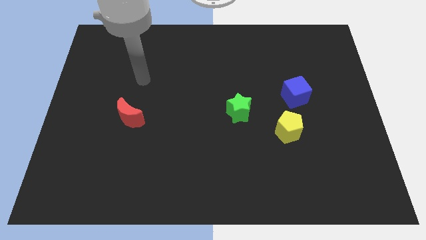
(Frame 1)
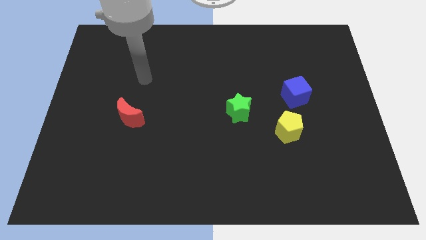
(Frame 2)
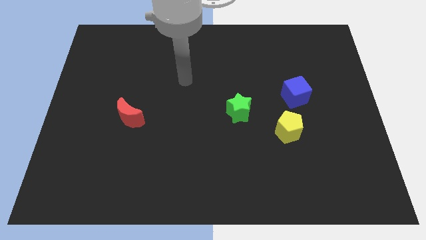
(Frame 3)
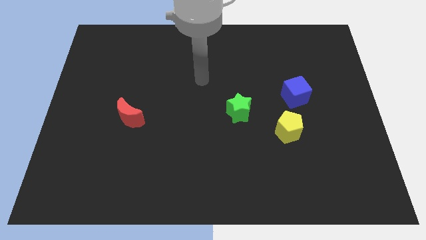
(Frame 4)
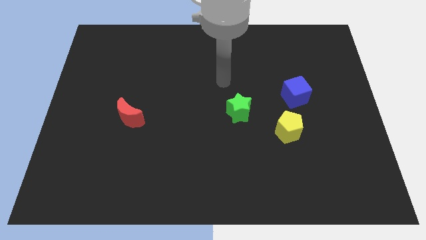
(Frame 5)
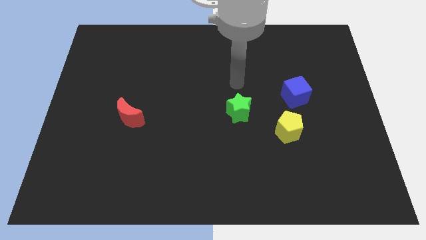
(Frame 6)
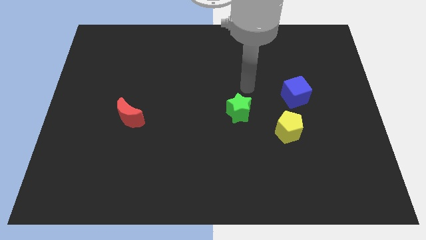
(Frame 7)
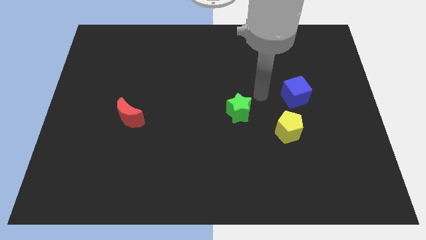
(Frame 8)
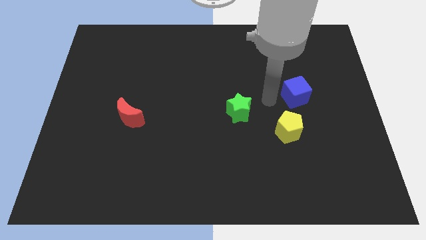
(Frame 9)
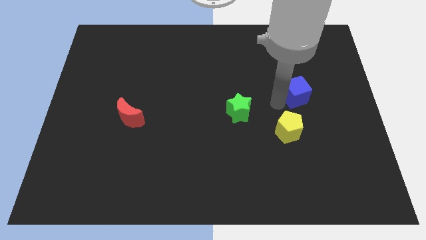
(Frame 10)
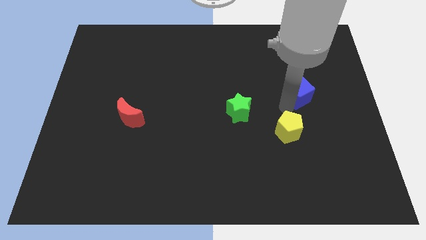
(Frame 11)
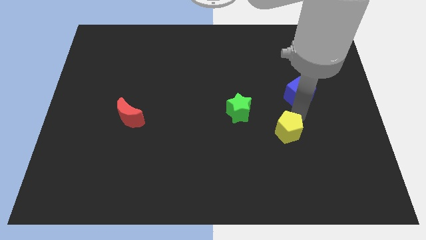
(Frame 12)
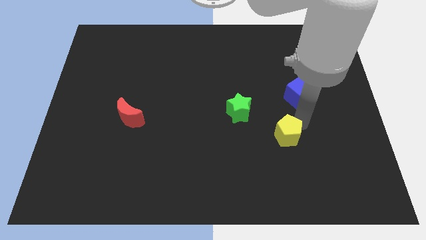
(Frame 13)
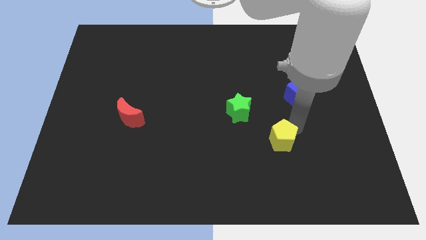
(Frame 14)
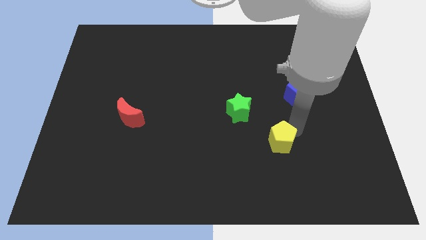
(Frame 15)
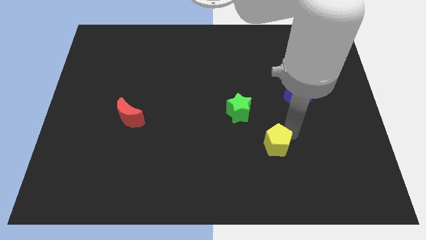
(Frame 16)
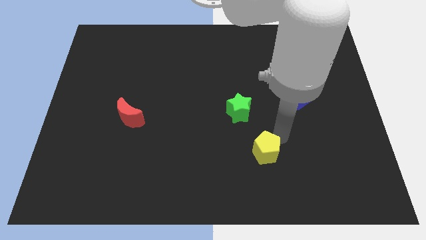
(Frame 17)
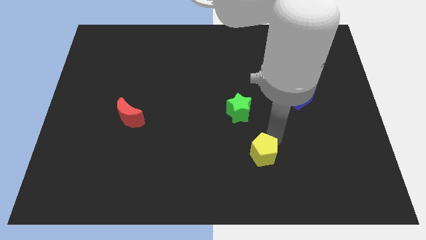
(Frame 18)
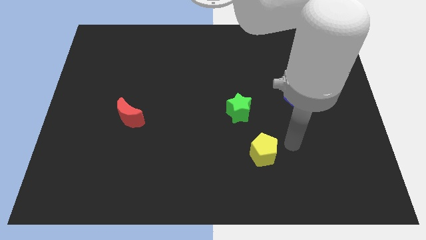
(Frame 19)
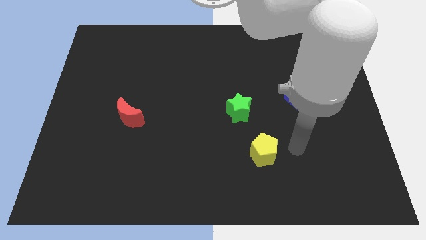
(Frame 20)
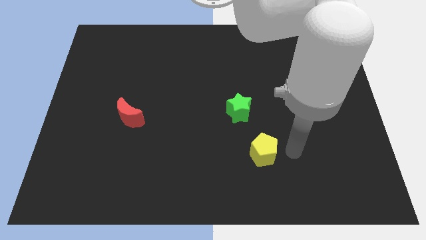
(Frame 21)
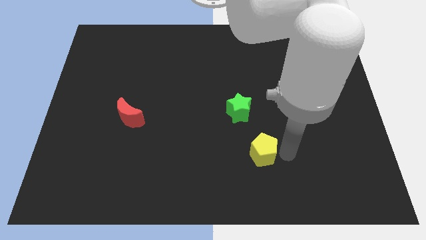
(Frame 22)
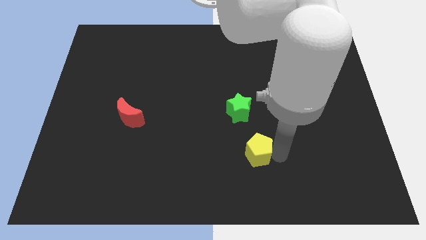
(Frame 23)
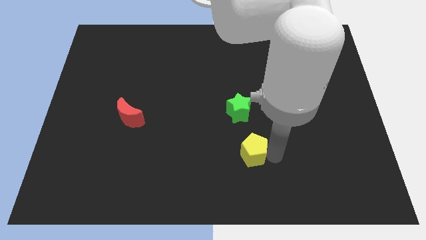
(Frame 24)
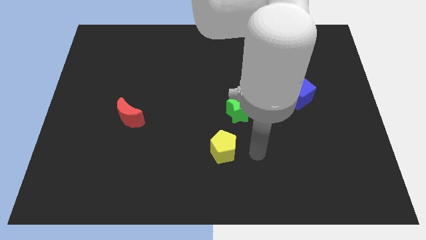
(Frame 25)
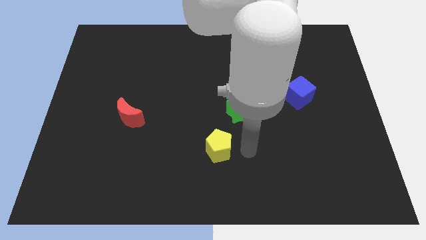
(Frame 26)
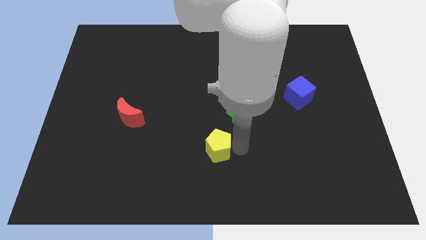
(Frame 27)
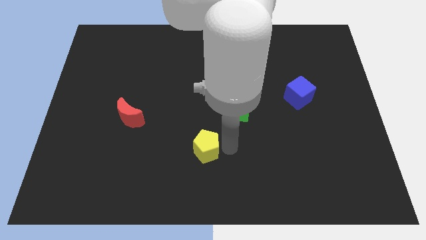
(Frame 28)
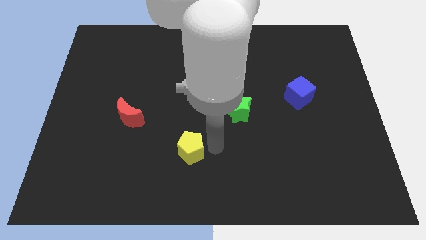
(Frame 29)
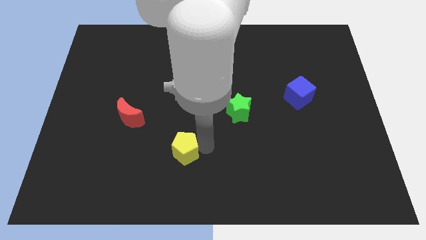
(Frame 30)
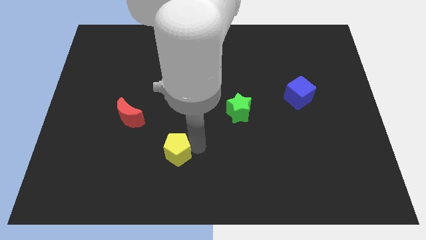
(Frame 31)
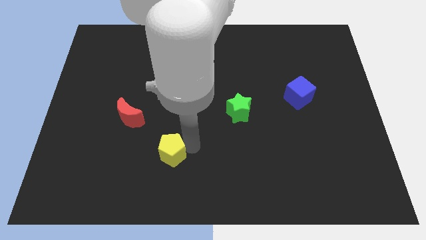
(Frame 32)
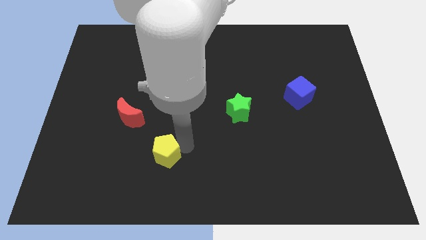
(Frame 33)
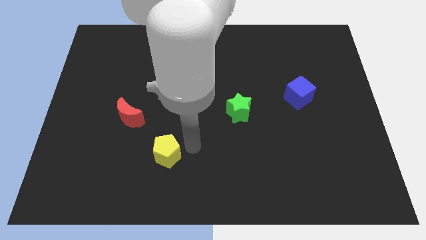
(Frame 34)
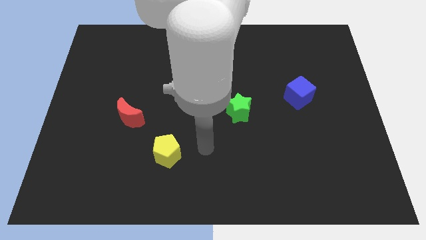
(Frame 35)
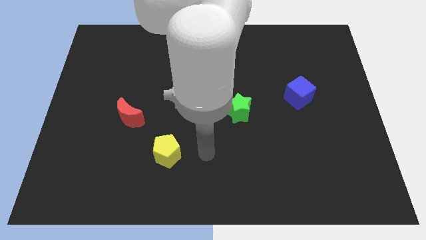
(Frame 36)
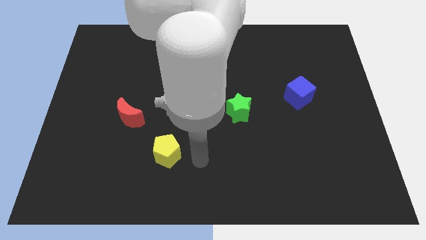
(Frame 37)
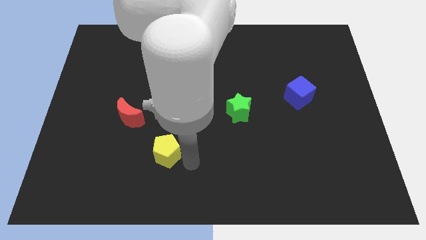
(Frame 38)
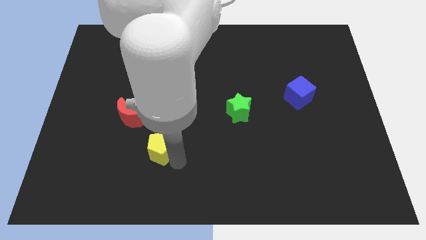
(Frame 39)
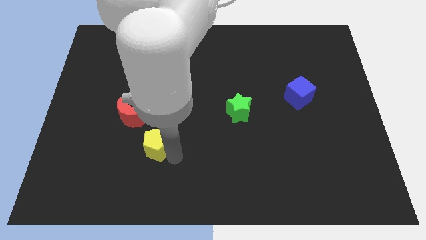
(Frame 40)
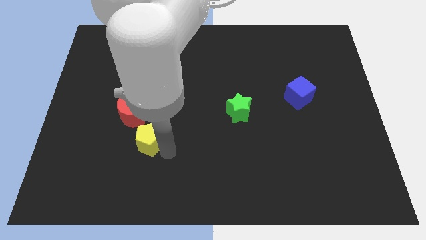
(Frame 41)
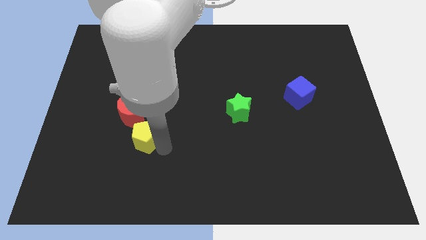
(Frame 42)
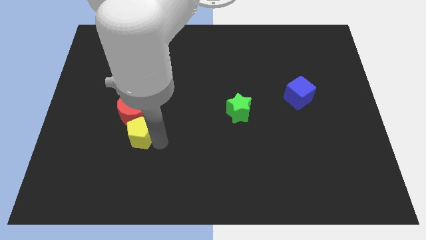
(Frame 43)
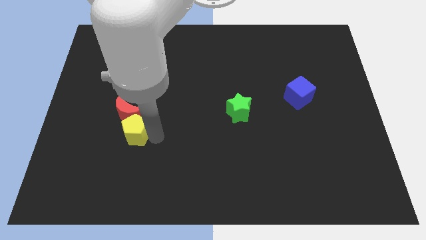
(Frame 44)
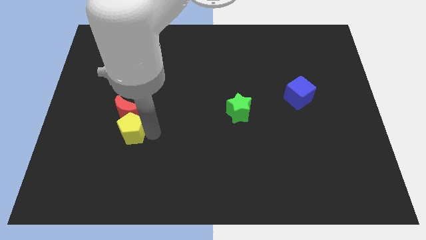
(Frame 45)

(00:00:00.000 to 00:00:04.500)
slide the yellow pentagon next to the red moon

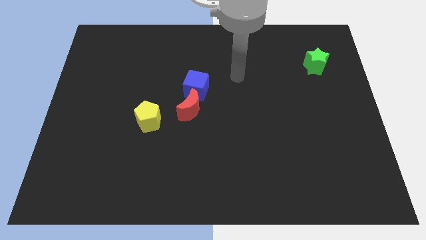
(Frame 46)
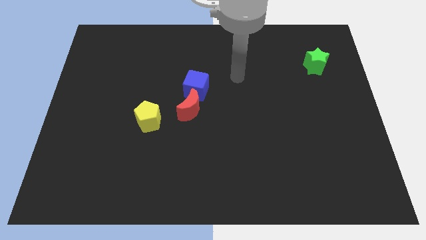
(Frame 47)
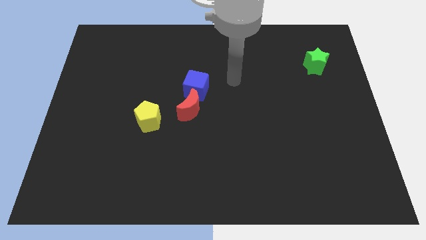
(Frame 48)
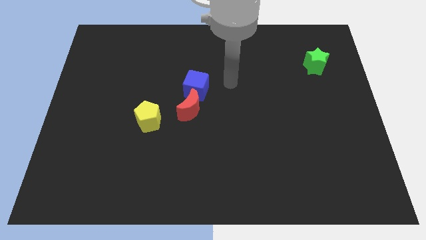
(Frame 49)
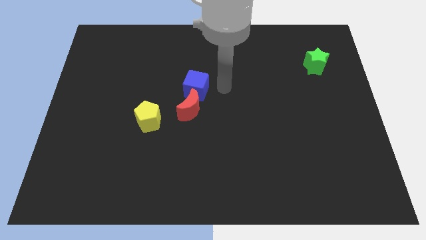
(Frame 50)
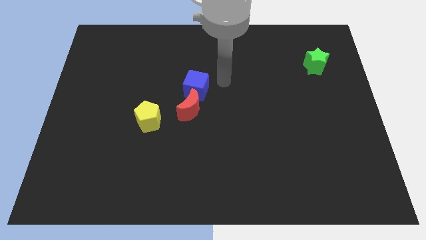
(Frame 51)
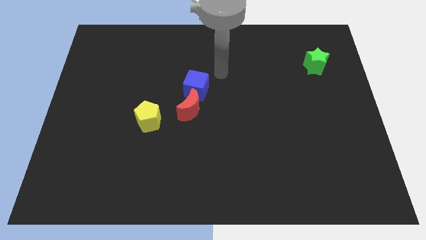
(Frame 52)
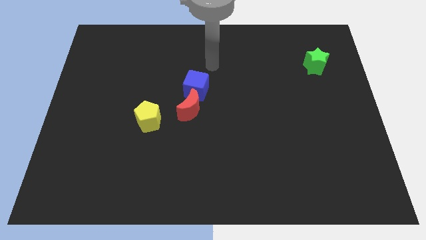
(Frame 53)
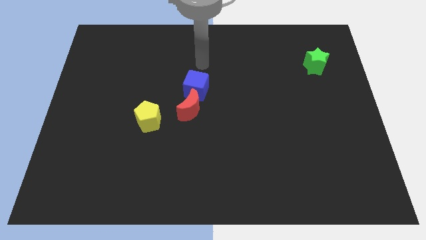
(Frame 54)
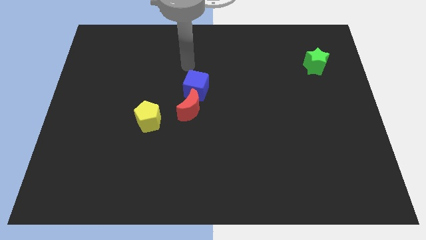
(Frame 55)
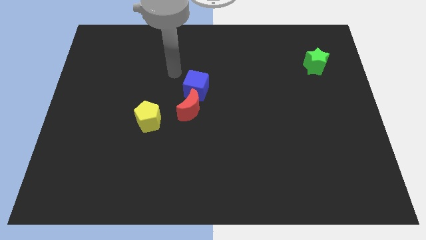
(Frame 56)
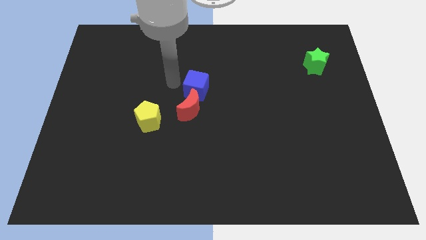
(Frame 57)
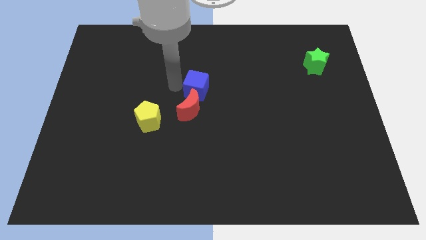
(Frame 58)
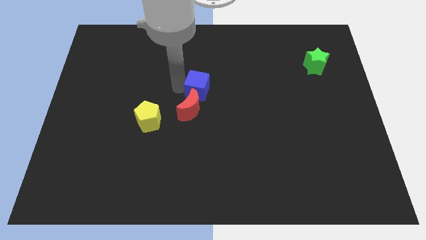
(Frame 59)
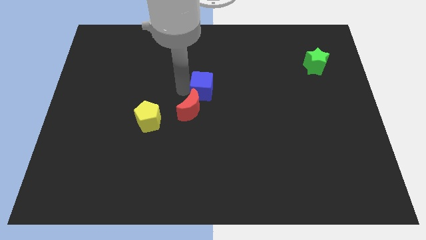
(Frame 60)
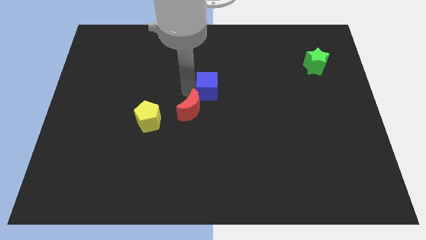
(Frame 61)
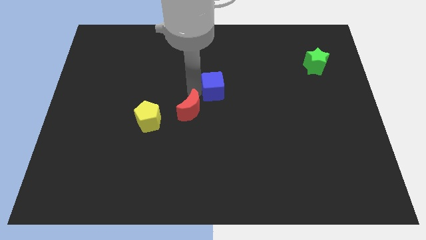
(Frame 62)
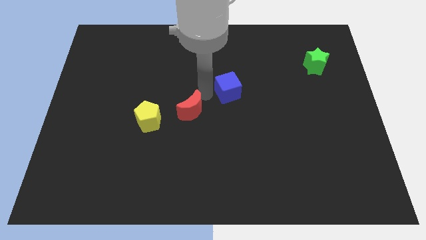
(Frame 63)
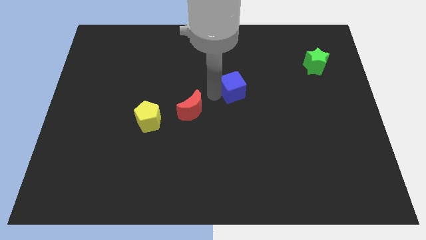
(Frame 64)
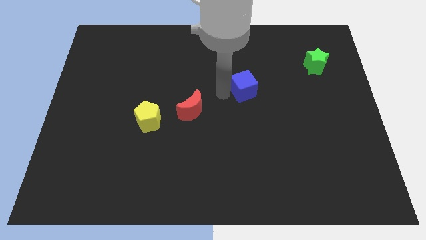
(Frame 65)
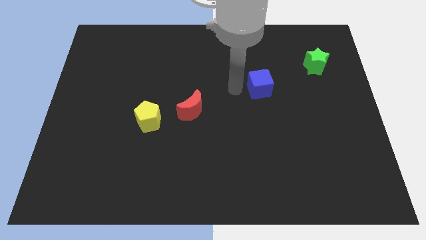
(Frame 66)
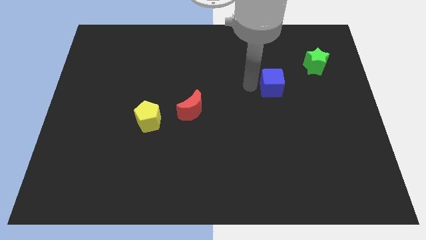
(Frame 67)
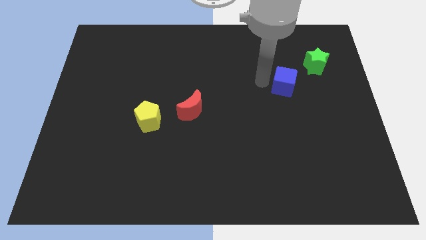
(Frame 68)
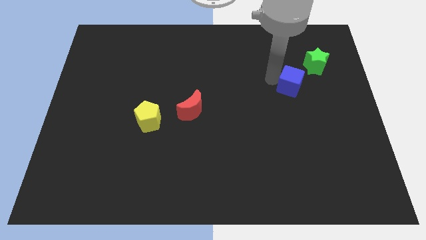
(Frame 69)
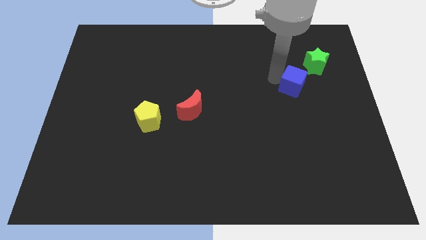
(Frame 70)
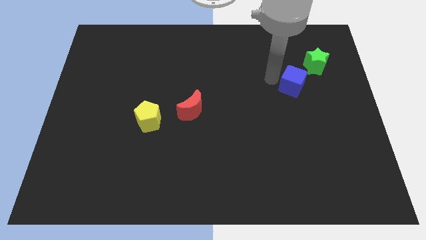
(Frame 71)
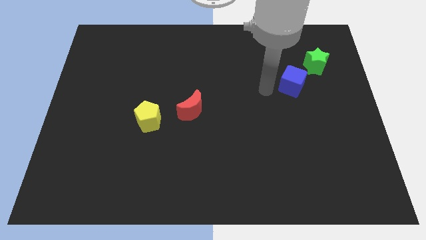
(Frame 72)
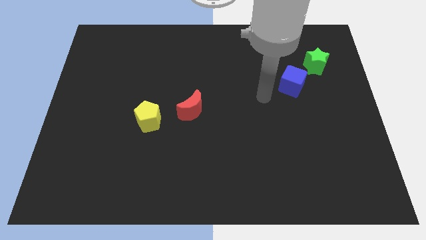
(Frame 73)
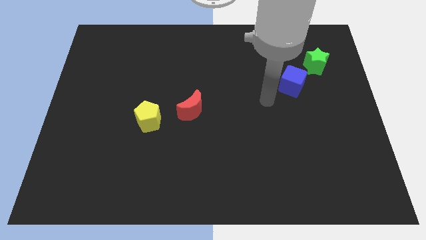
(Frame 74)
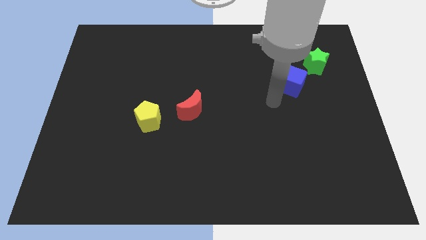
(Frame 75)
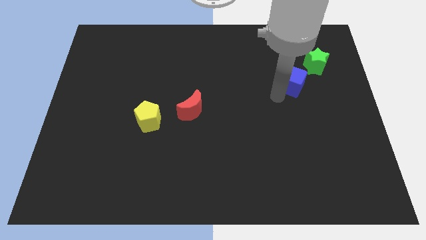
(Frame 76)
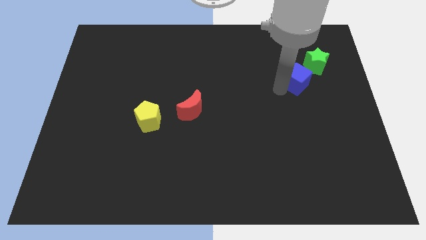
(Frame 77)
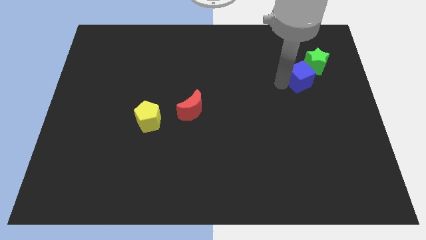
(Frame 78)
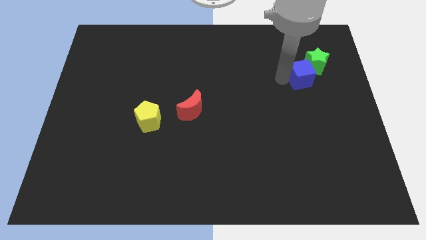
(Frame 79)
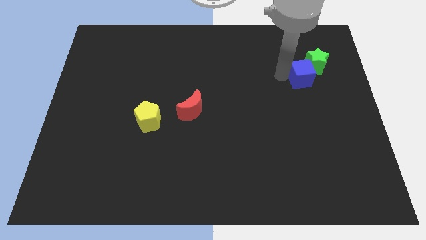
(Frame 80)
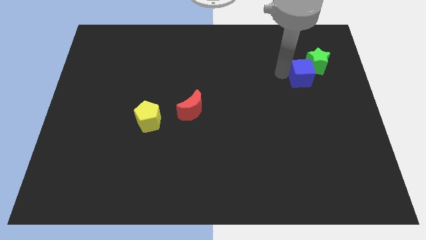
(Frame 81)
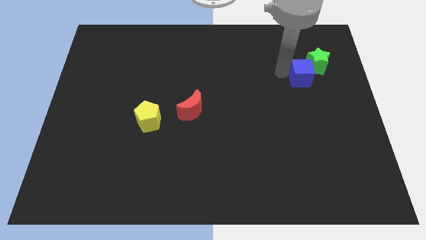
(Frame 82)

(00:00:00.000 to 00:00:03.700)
push the blue cube to the star

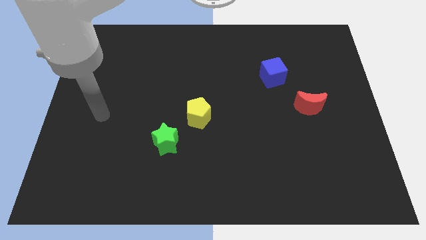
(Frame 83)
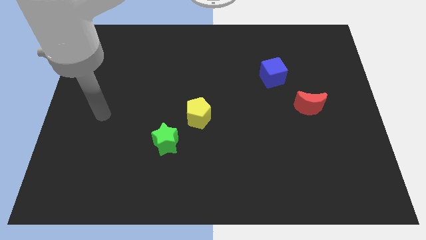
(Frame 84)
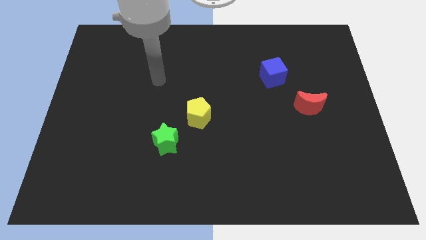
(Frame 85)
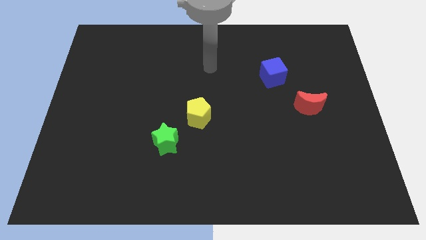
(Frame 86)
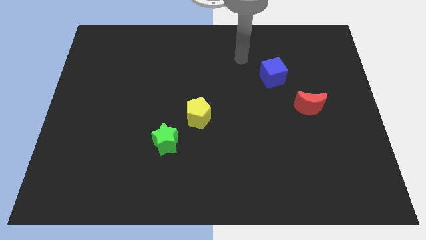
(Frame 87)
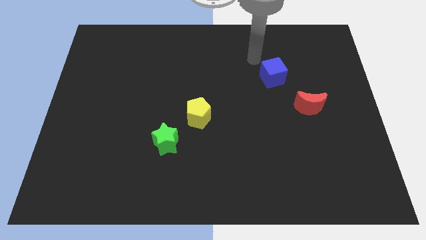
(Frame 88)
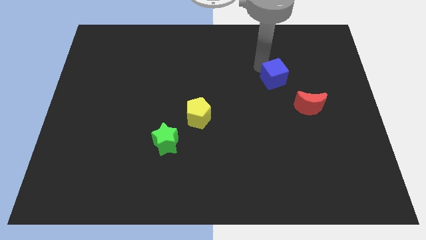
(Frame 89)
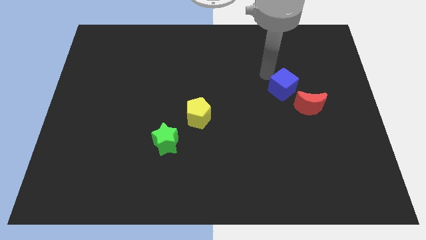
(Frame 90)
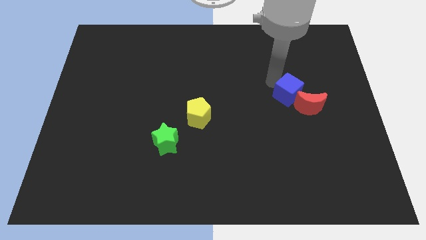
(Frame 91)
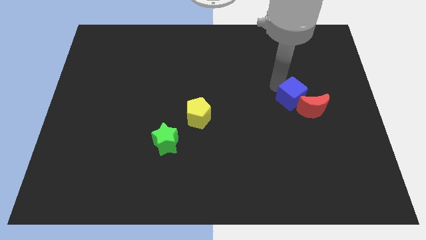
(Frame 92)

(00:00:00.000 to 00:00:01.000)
put the blue cube next to the red block
